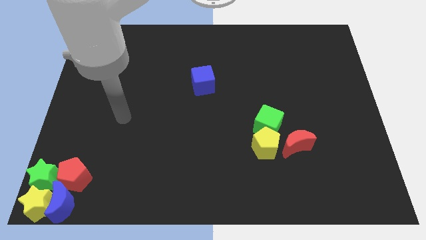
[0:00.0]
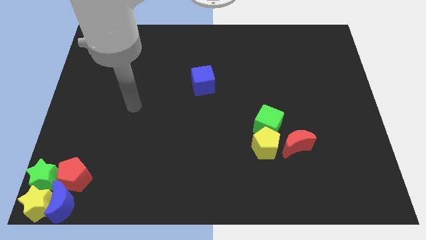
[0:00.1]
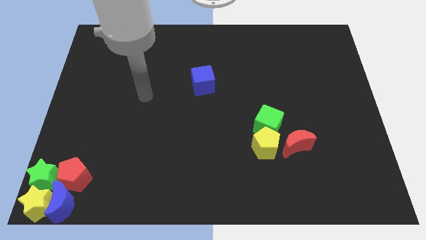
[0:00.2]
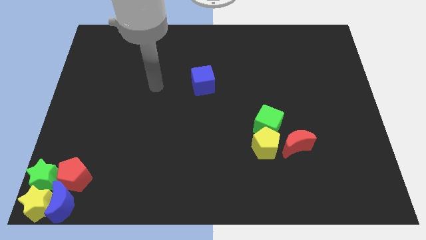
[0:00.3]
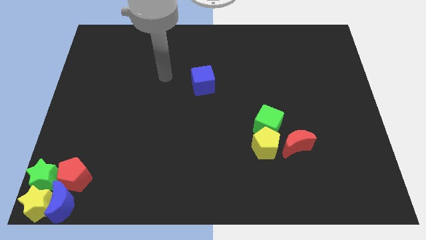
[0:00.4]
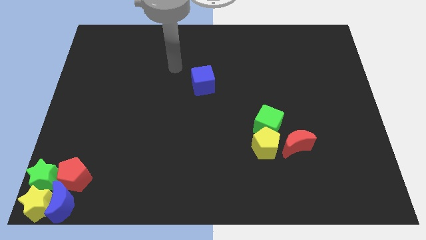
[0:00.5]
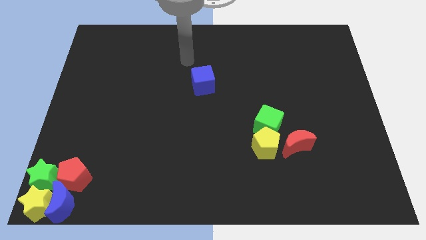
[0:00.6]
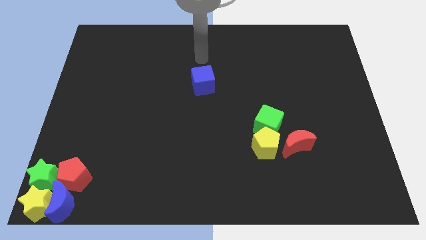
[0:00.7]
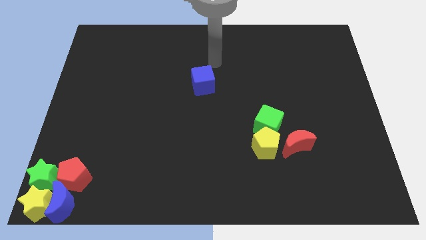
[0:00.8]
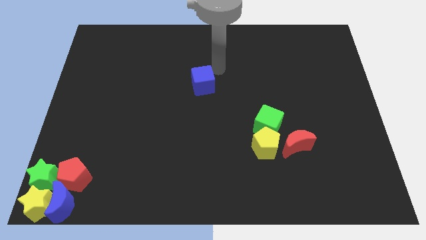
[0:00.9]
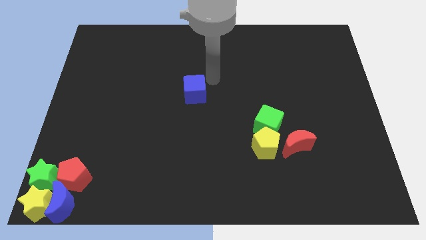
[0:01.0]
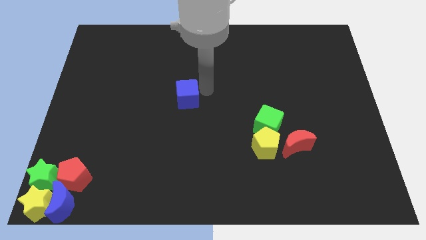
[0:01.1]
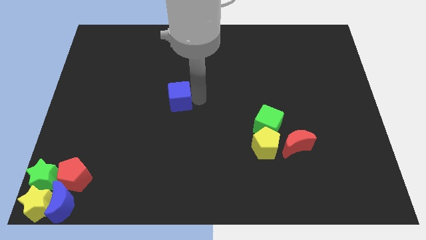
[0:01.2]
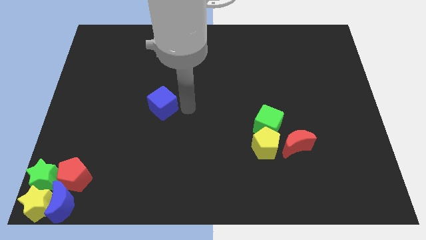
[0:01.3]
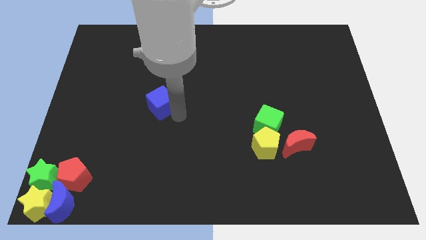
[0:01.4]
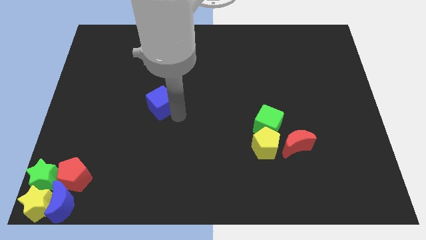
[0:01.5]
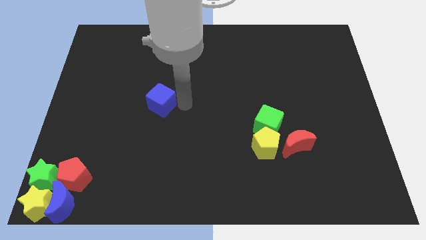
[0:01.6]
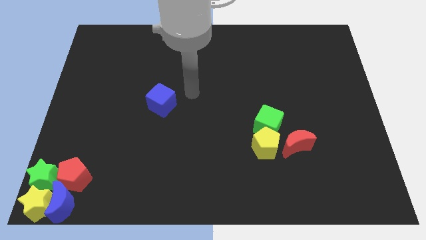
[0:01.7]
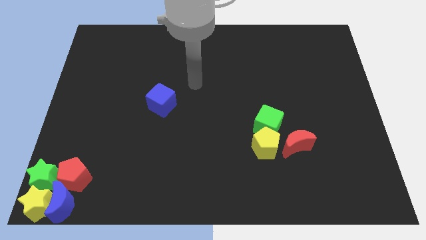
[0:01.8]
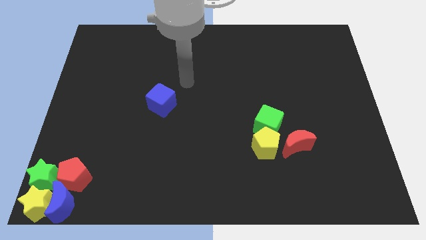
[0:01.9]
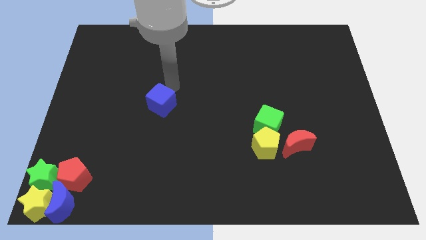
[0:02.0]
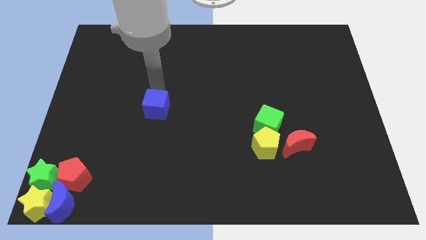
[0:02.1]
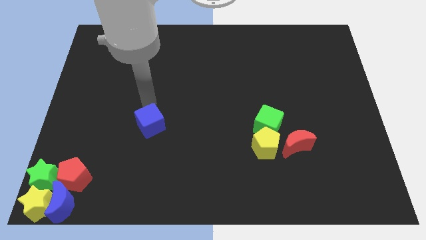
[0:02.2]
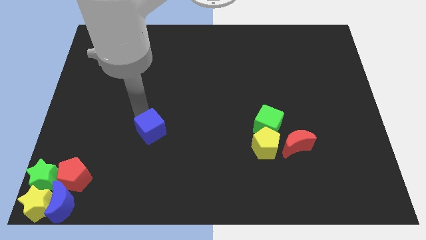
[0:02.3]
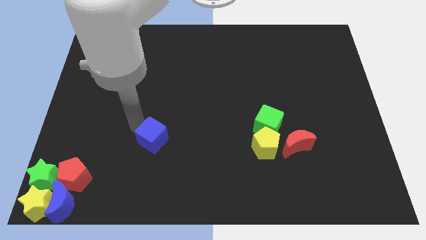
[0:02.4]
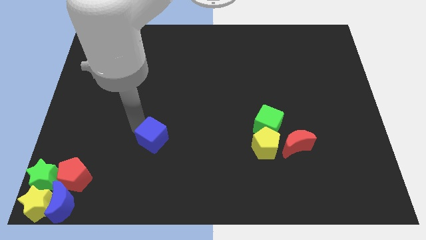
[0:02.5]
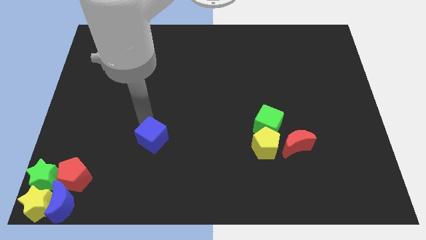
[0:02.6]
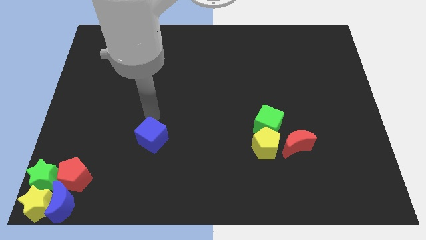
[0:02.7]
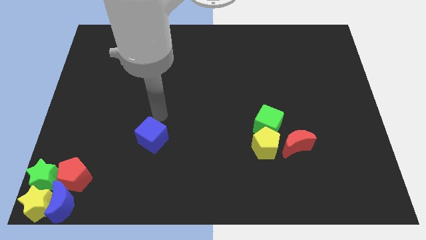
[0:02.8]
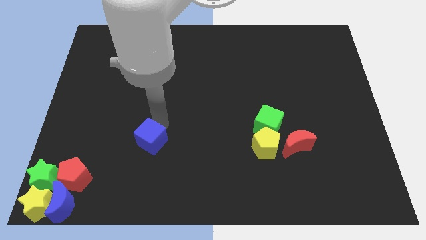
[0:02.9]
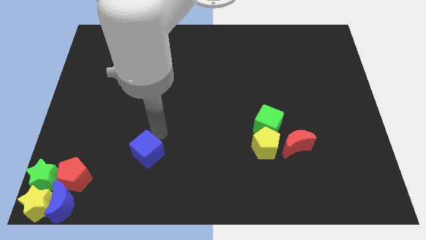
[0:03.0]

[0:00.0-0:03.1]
move the blue cube diagonally on the top right side of the red pentagon

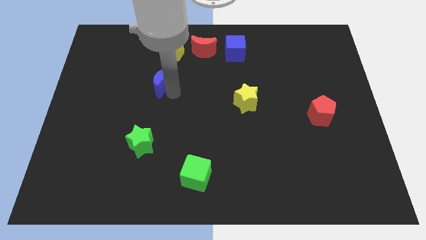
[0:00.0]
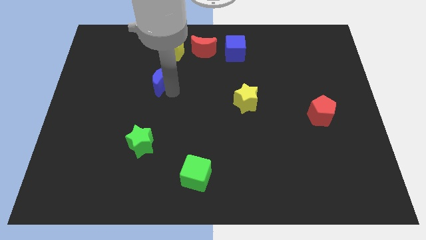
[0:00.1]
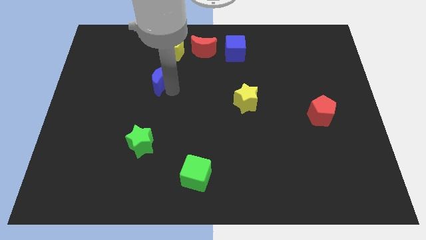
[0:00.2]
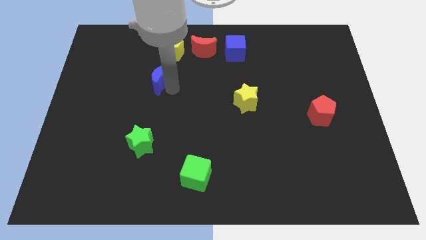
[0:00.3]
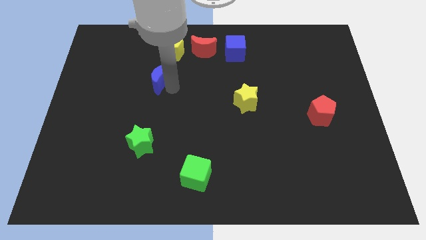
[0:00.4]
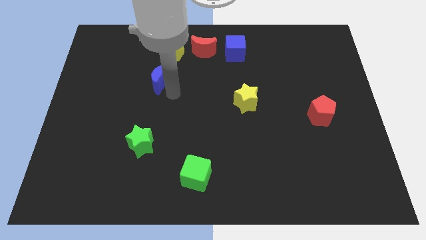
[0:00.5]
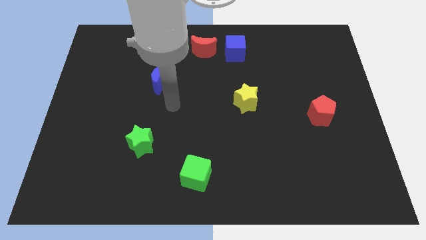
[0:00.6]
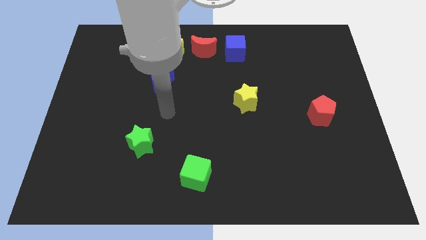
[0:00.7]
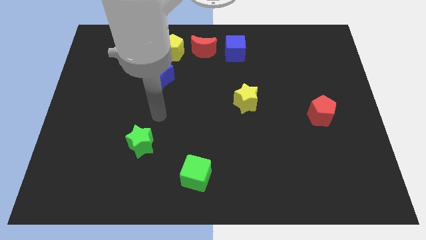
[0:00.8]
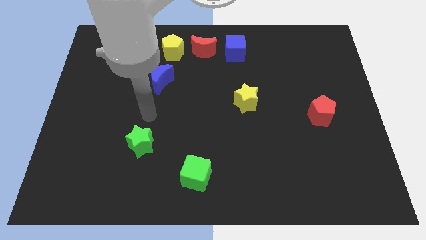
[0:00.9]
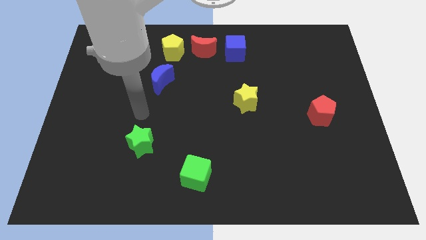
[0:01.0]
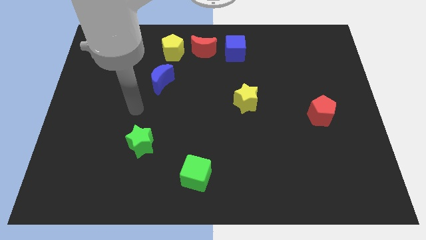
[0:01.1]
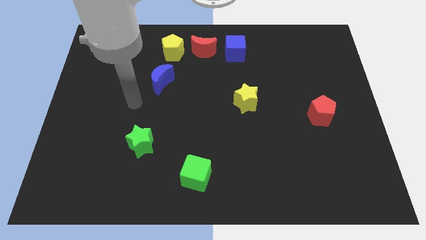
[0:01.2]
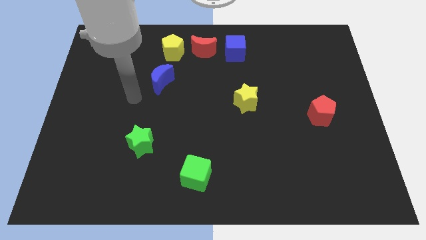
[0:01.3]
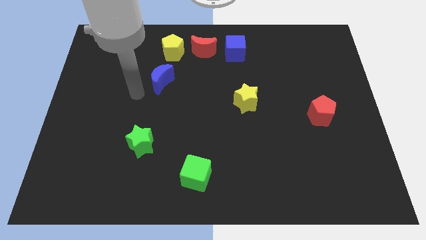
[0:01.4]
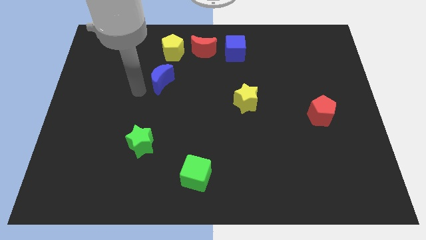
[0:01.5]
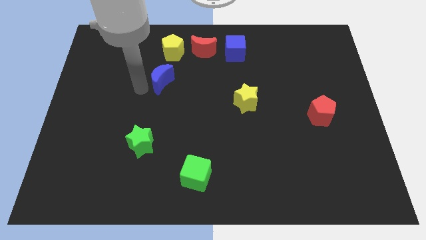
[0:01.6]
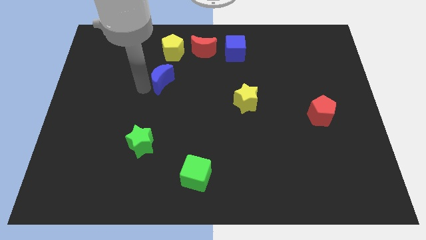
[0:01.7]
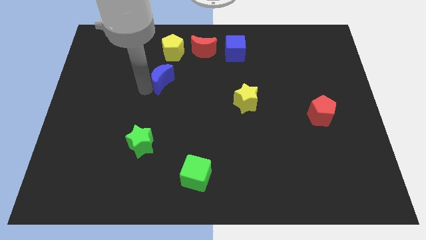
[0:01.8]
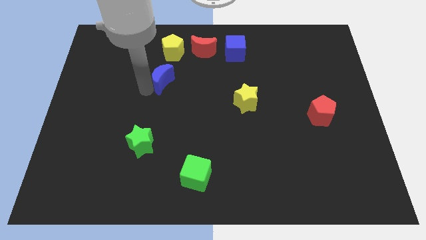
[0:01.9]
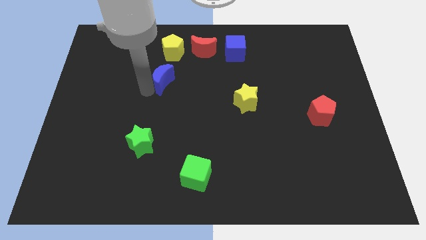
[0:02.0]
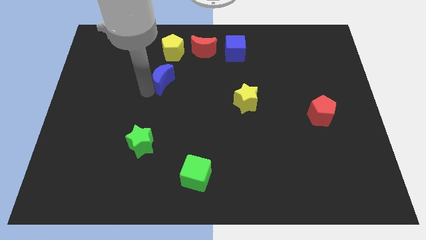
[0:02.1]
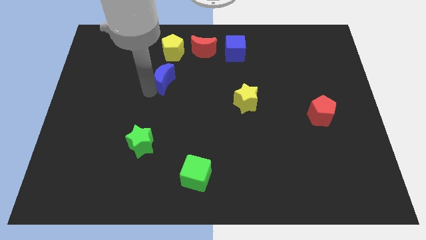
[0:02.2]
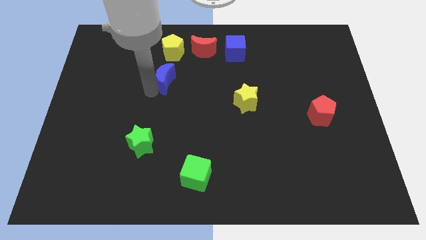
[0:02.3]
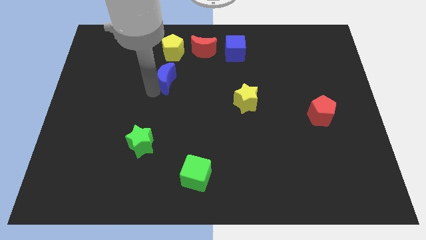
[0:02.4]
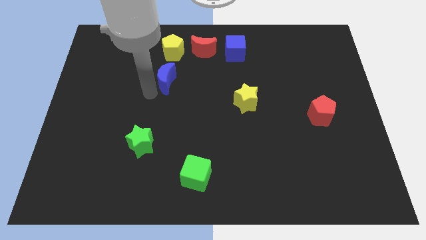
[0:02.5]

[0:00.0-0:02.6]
push the blue crescent slightly to the right

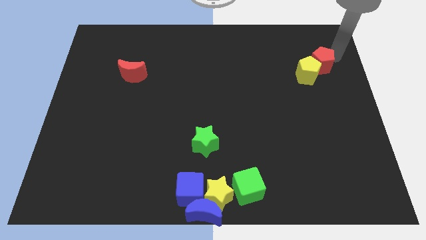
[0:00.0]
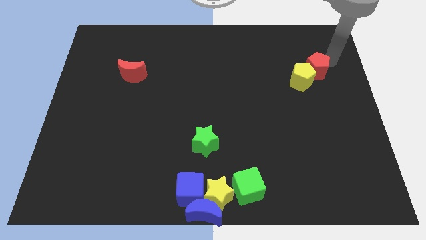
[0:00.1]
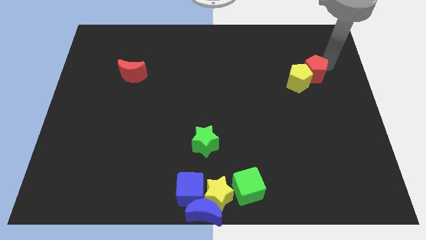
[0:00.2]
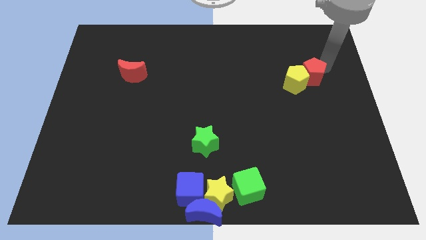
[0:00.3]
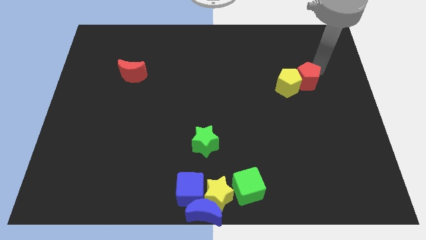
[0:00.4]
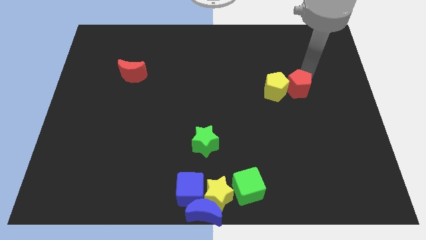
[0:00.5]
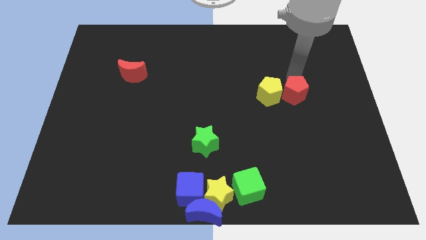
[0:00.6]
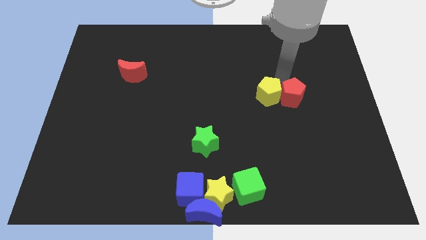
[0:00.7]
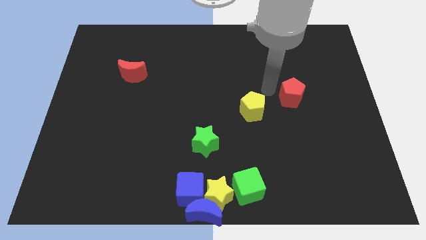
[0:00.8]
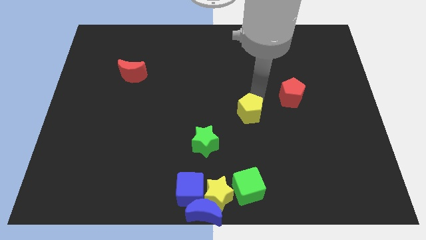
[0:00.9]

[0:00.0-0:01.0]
separate the yellow pentagon from red pentagon

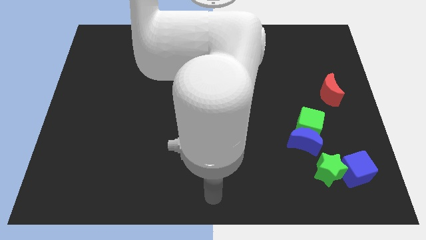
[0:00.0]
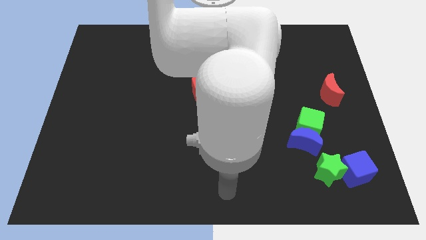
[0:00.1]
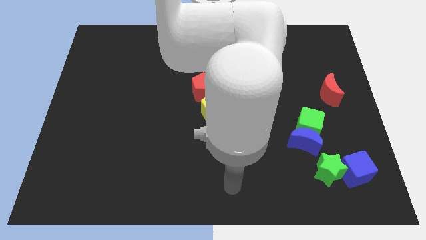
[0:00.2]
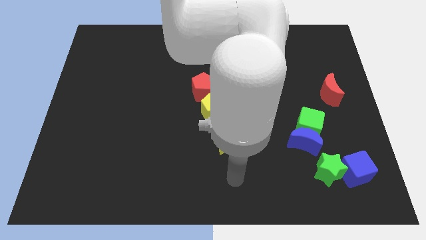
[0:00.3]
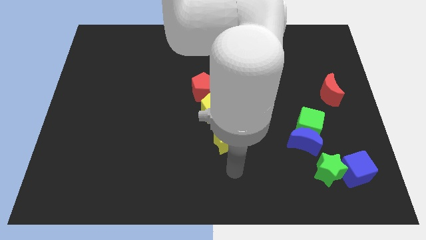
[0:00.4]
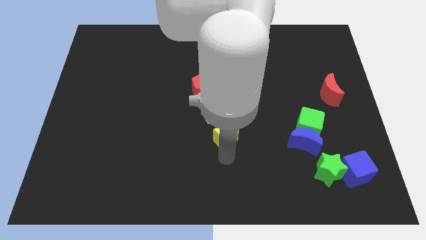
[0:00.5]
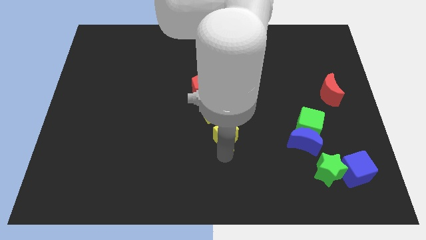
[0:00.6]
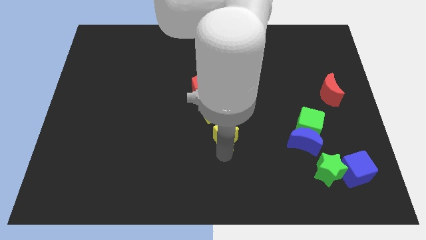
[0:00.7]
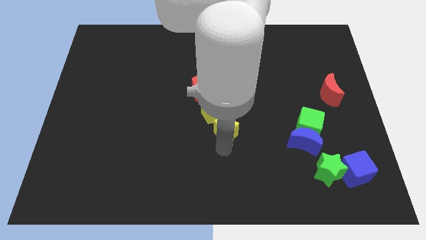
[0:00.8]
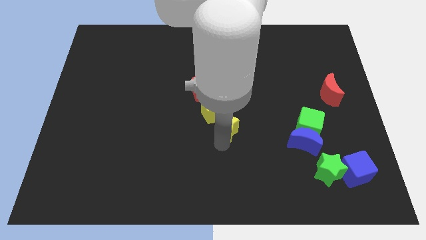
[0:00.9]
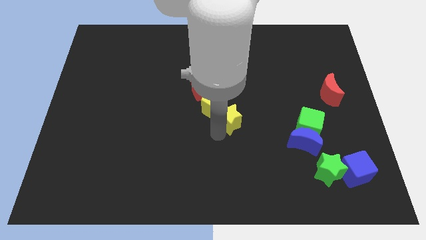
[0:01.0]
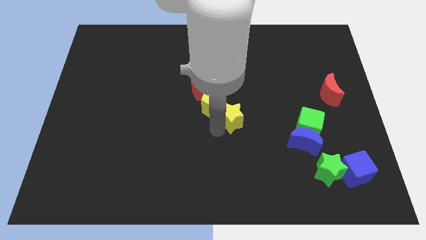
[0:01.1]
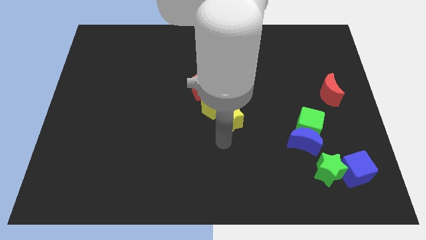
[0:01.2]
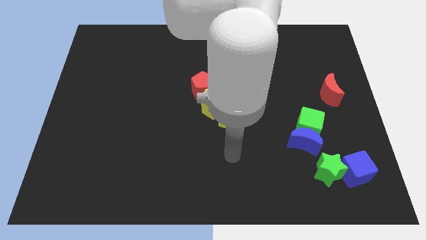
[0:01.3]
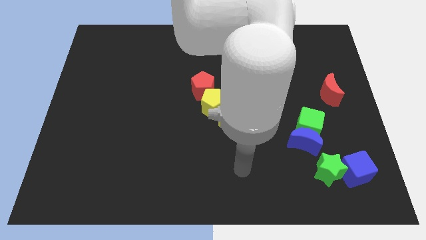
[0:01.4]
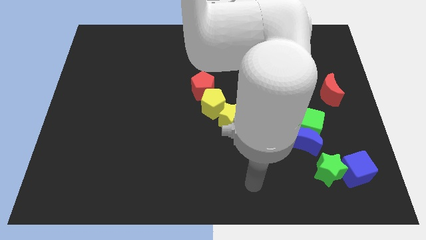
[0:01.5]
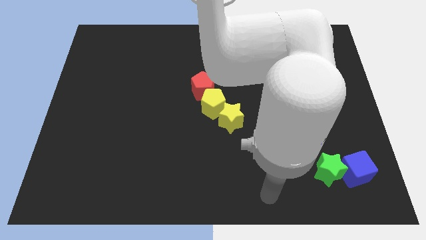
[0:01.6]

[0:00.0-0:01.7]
move the yellow star close to the yellow pentagon

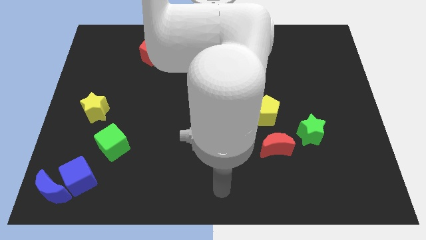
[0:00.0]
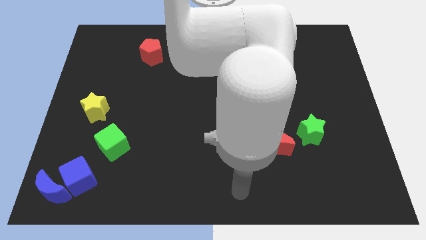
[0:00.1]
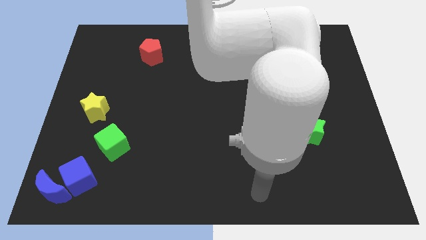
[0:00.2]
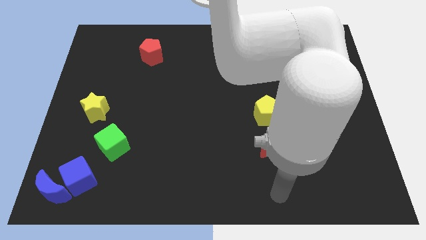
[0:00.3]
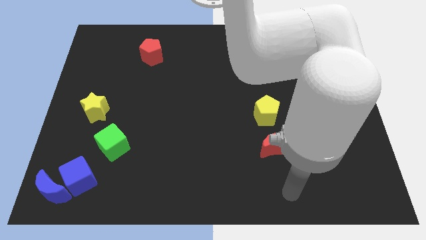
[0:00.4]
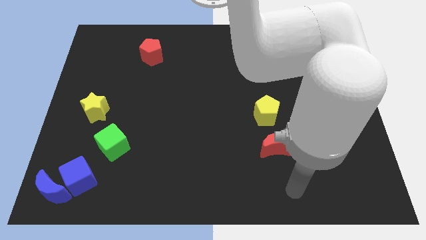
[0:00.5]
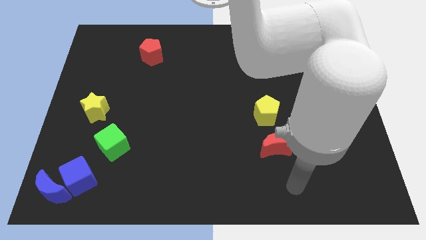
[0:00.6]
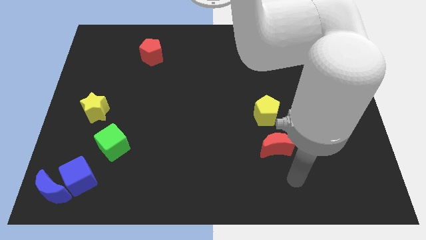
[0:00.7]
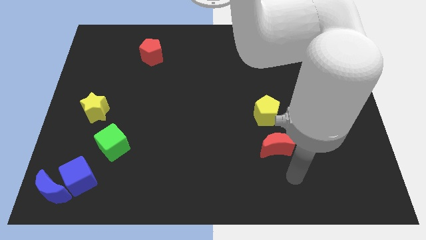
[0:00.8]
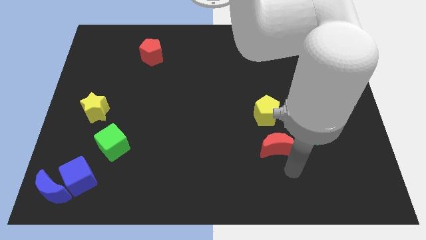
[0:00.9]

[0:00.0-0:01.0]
place your arm at the bottom of red moon
